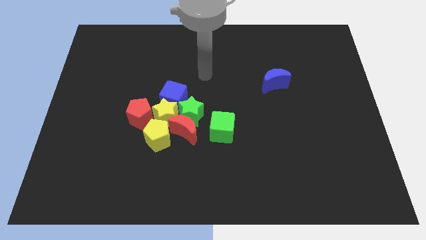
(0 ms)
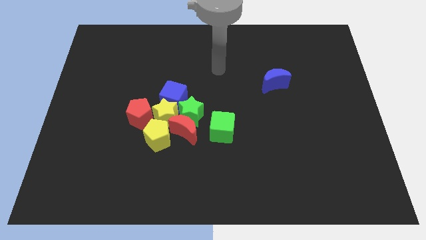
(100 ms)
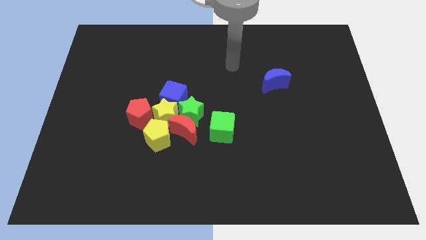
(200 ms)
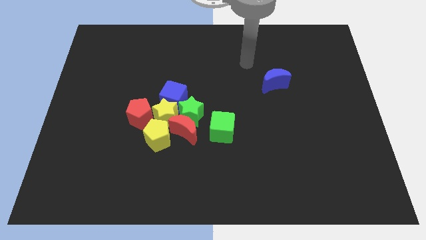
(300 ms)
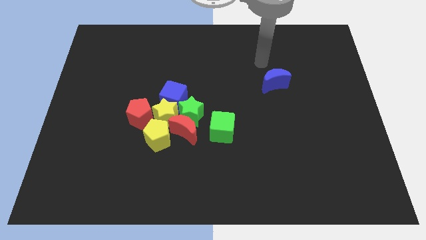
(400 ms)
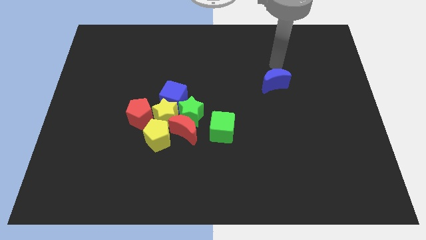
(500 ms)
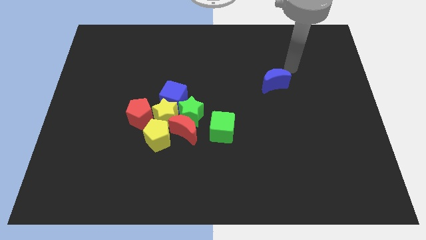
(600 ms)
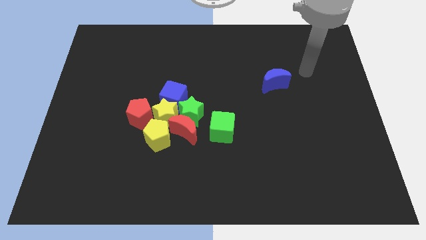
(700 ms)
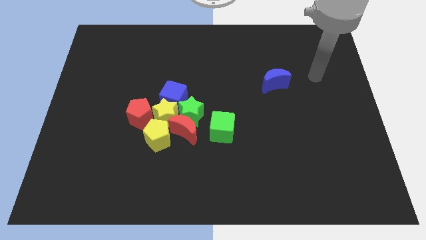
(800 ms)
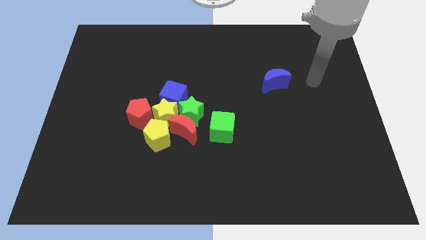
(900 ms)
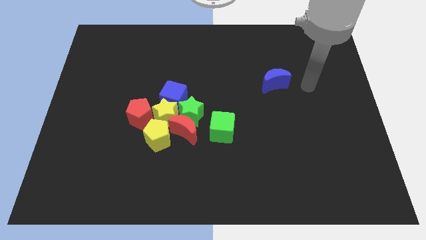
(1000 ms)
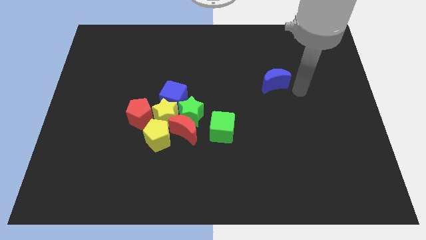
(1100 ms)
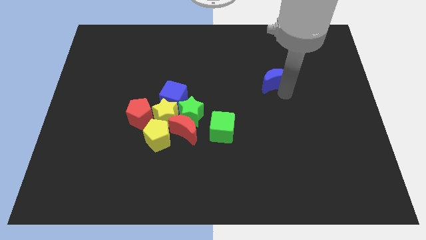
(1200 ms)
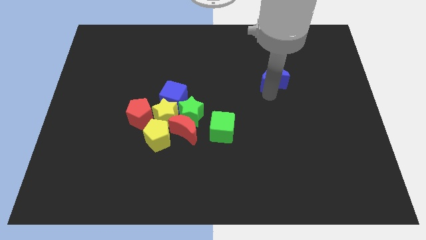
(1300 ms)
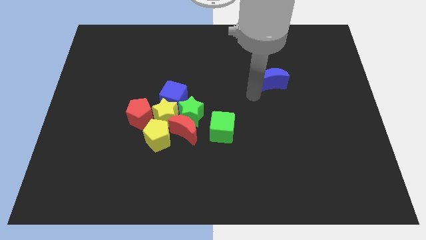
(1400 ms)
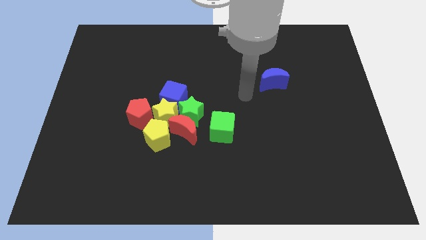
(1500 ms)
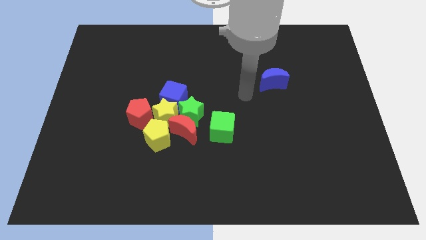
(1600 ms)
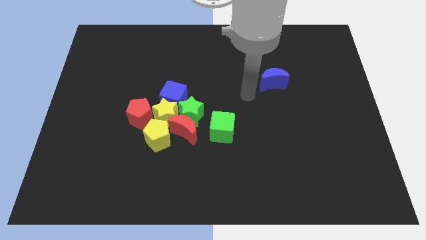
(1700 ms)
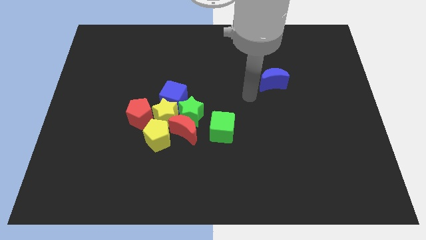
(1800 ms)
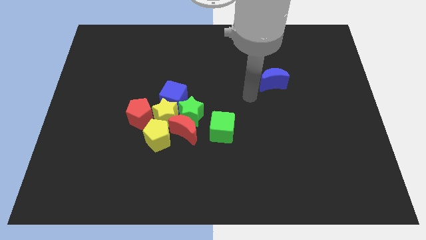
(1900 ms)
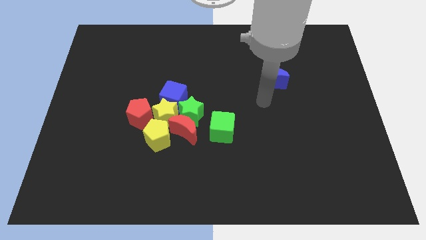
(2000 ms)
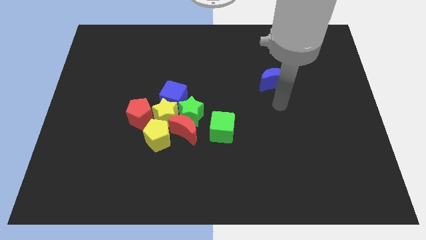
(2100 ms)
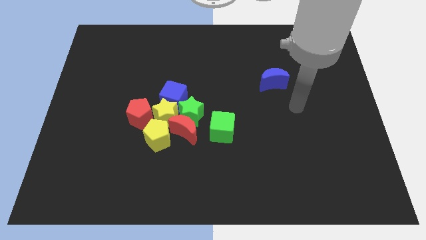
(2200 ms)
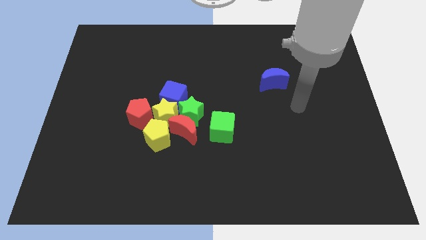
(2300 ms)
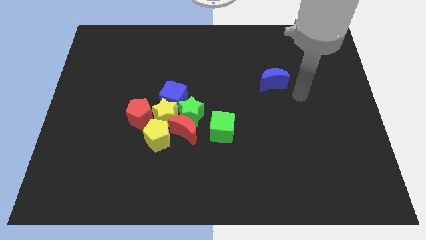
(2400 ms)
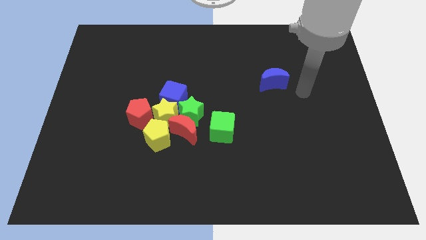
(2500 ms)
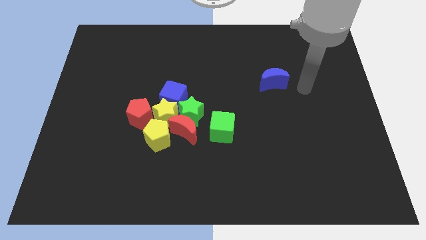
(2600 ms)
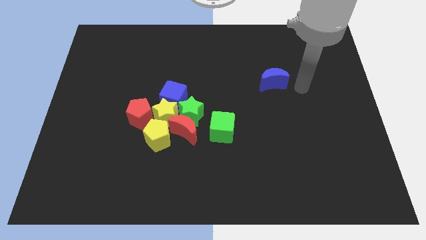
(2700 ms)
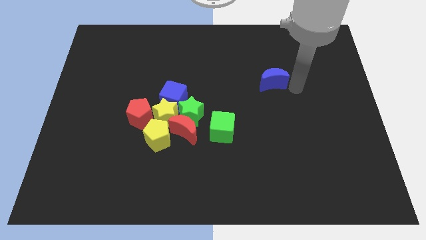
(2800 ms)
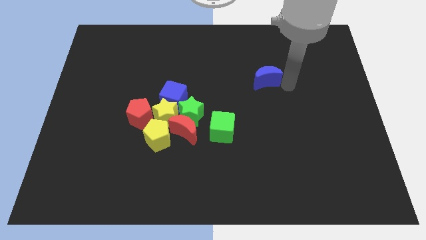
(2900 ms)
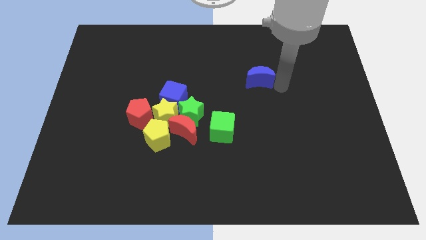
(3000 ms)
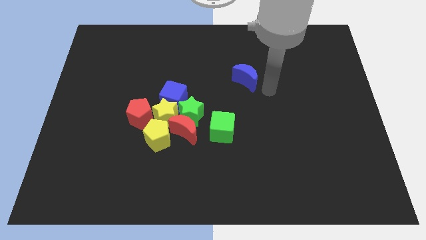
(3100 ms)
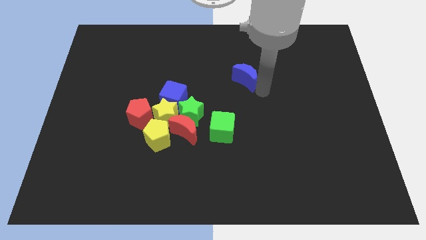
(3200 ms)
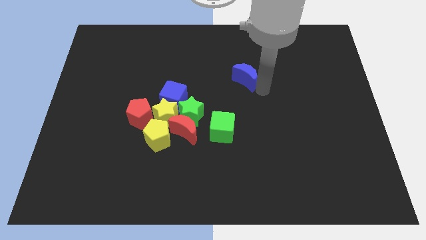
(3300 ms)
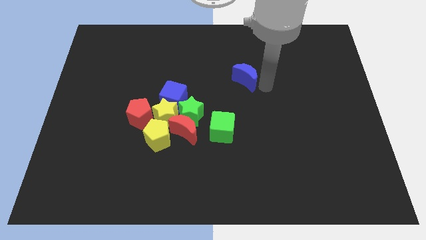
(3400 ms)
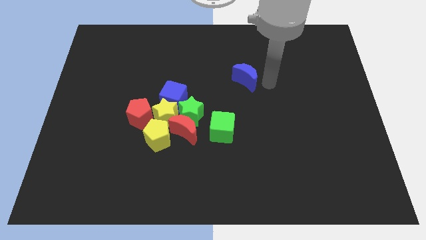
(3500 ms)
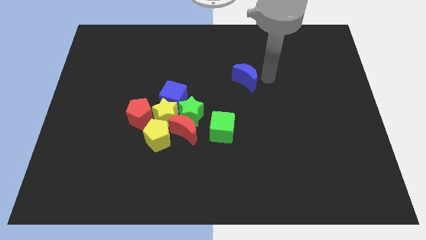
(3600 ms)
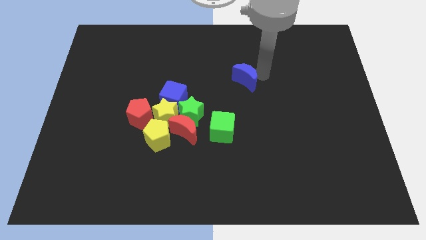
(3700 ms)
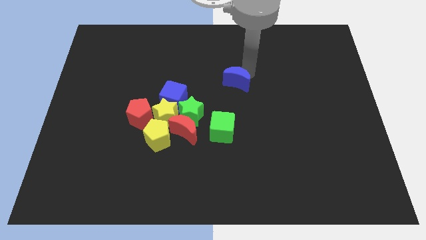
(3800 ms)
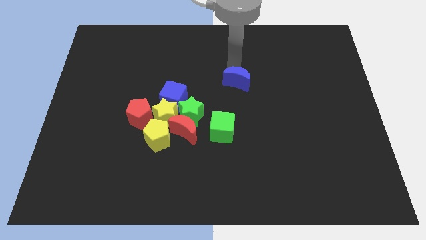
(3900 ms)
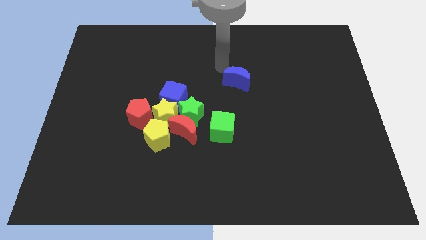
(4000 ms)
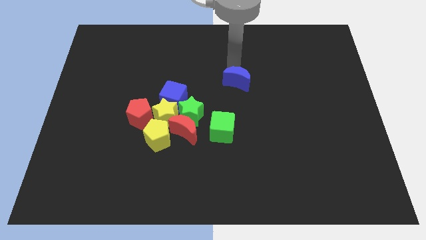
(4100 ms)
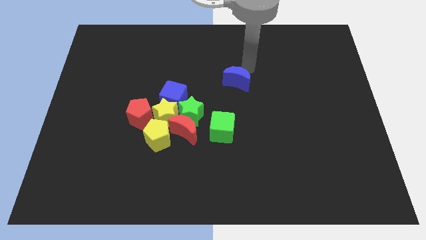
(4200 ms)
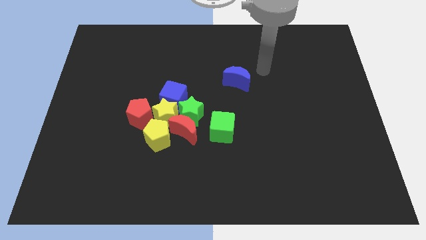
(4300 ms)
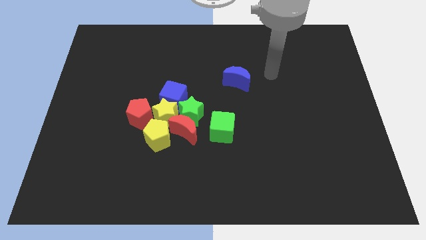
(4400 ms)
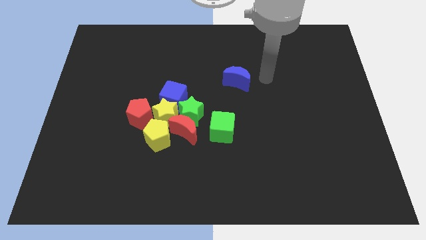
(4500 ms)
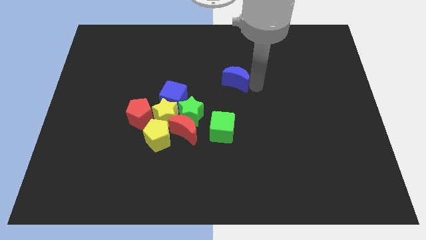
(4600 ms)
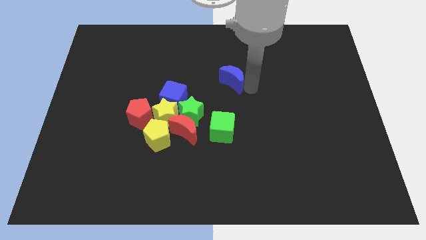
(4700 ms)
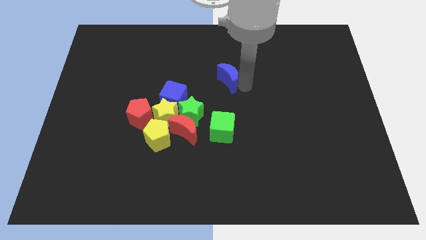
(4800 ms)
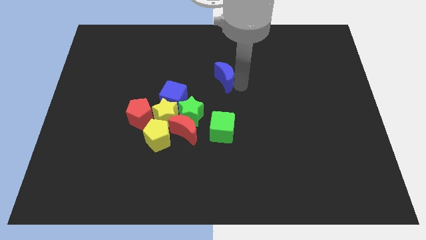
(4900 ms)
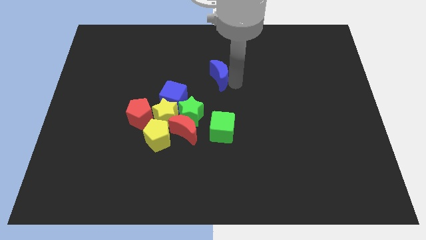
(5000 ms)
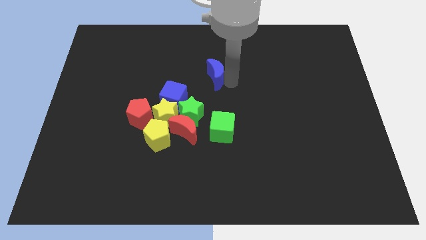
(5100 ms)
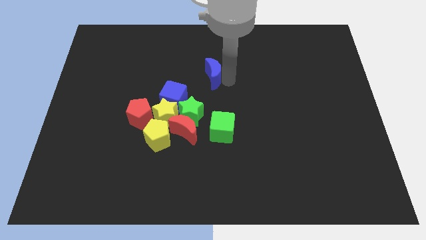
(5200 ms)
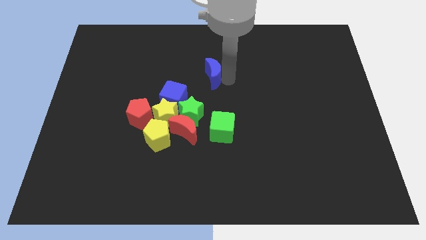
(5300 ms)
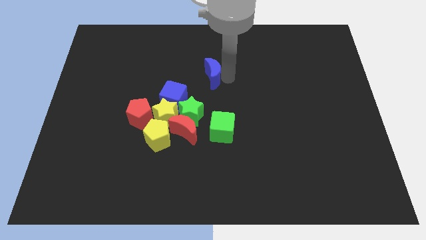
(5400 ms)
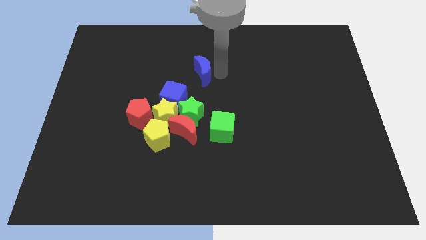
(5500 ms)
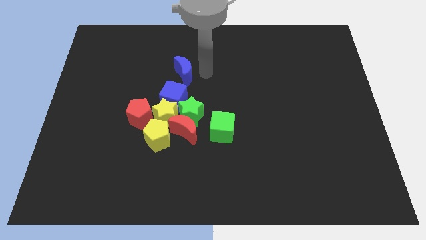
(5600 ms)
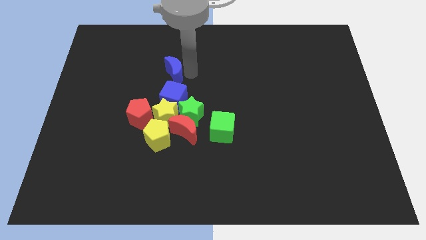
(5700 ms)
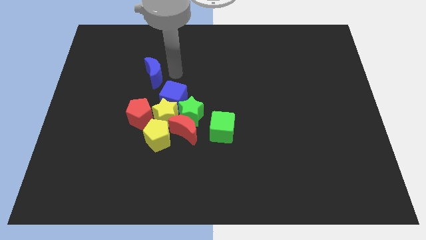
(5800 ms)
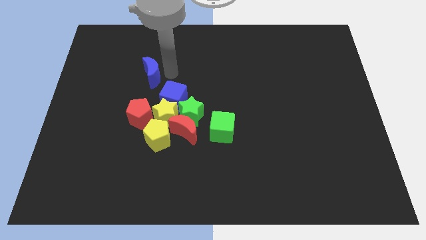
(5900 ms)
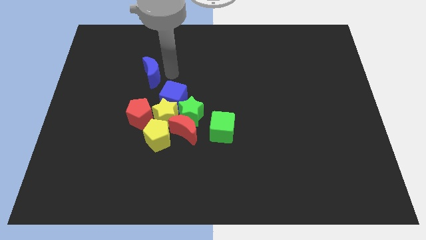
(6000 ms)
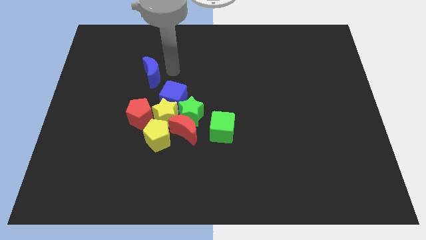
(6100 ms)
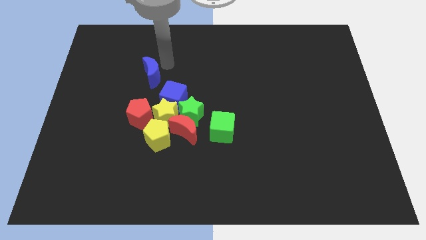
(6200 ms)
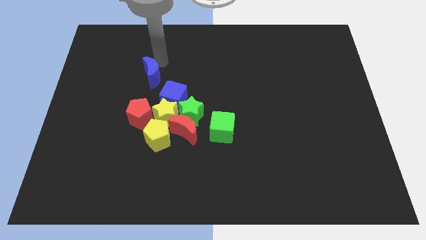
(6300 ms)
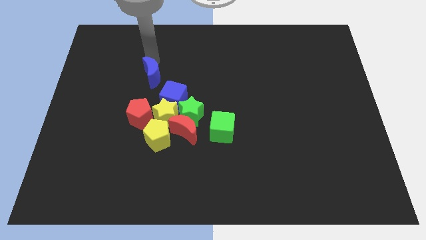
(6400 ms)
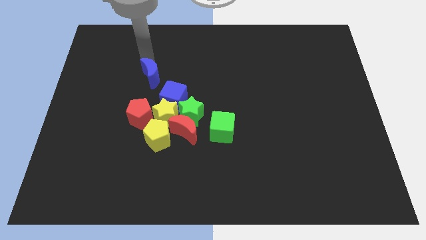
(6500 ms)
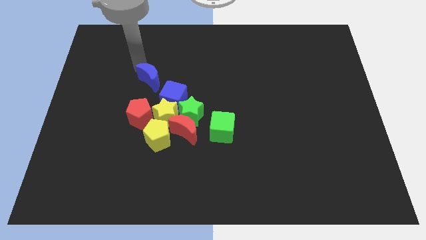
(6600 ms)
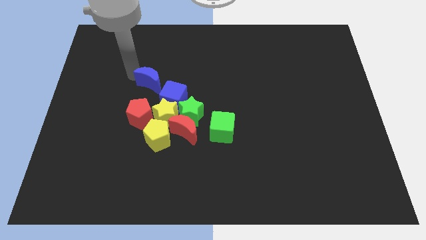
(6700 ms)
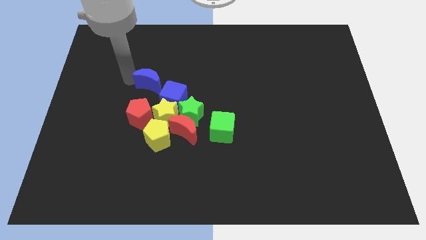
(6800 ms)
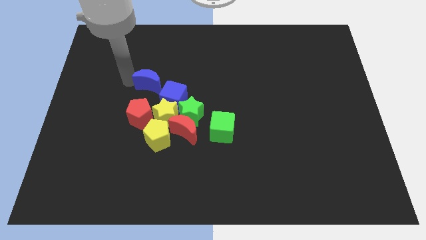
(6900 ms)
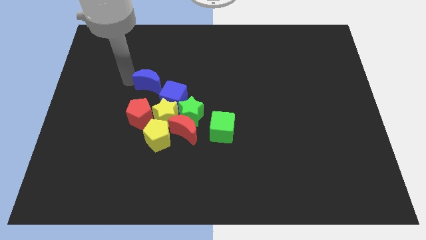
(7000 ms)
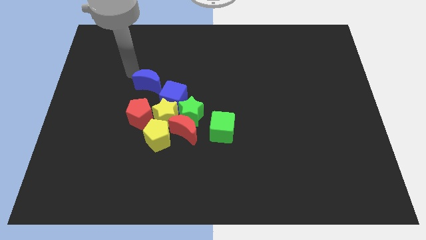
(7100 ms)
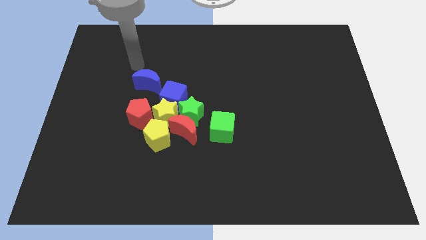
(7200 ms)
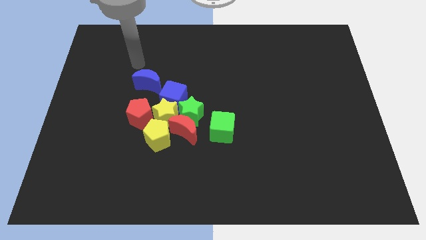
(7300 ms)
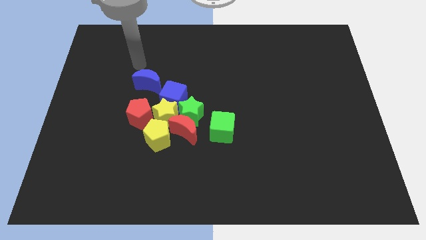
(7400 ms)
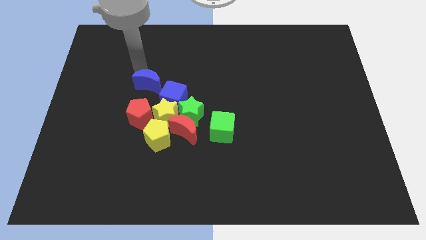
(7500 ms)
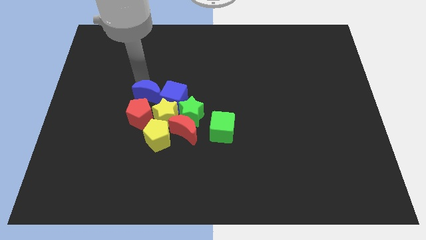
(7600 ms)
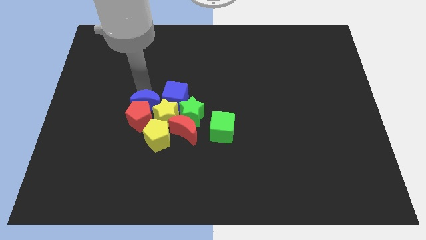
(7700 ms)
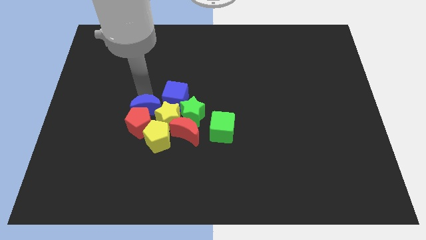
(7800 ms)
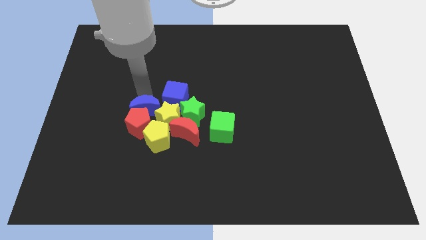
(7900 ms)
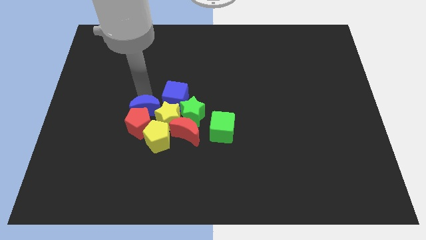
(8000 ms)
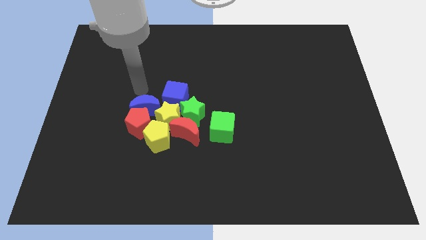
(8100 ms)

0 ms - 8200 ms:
push the blue crescent into the red pentagon

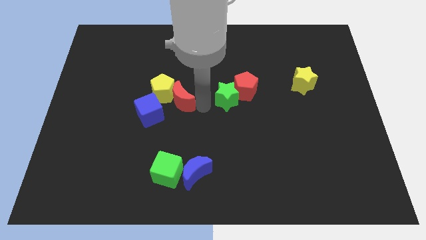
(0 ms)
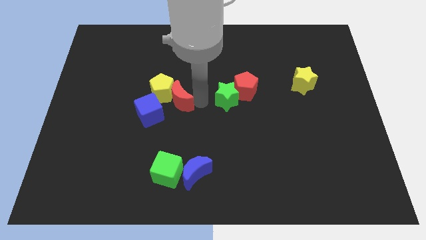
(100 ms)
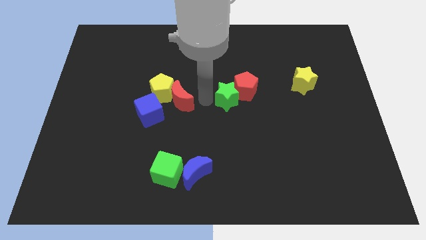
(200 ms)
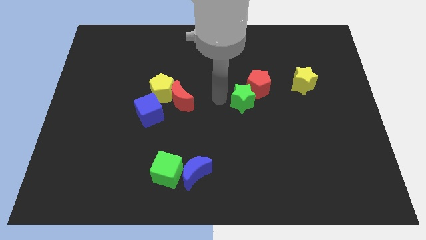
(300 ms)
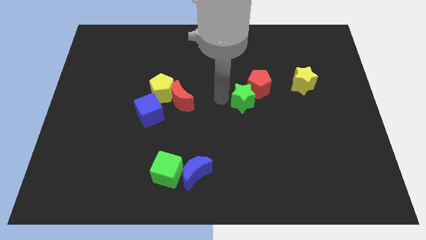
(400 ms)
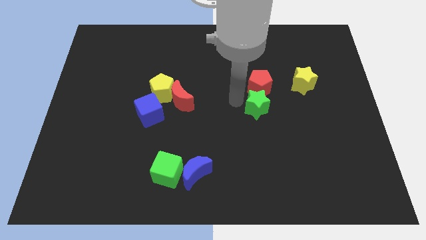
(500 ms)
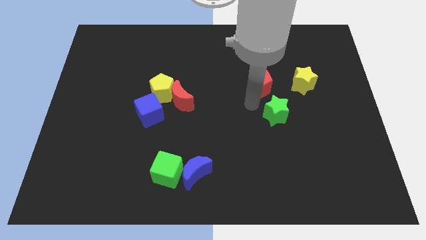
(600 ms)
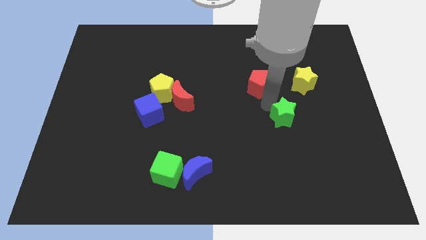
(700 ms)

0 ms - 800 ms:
move the red pentagon with the green star
